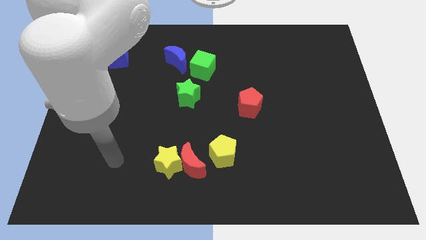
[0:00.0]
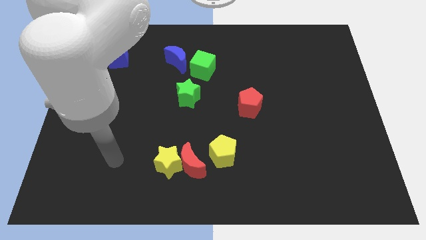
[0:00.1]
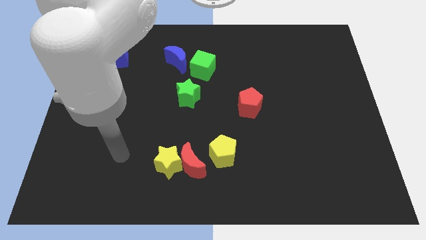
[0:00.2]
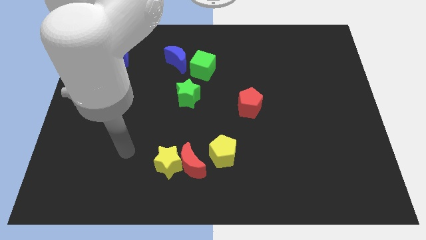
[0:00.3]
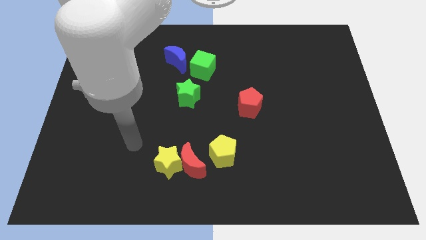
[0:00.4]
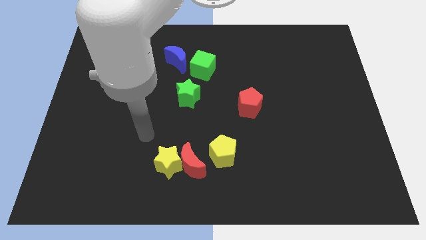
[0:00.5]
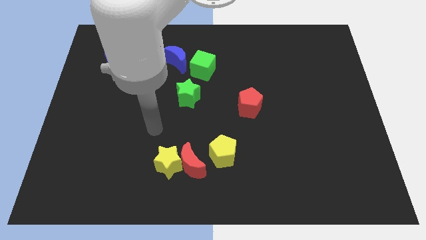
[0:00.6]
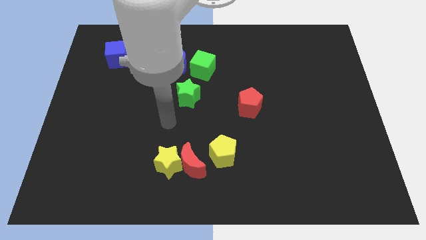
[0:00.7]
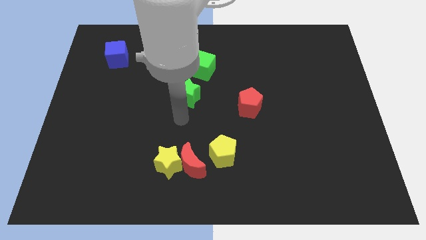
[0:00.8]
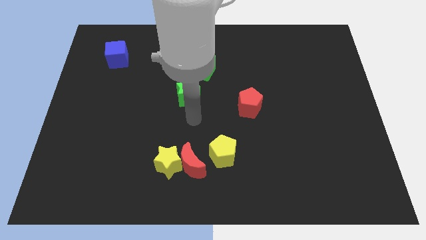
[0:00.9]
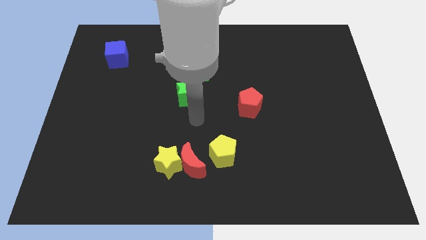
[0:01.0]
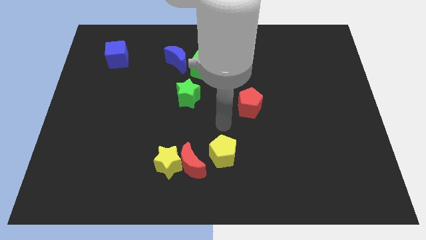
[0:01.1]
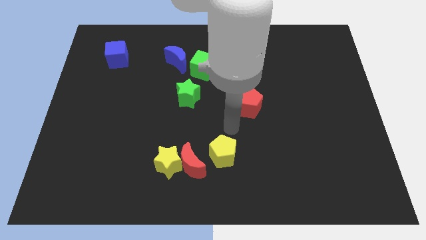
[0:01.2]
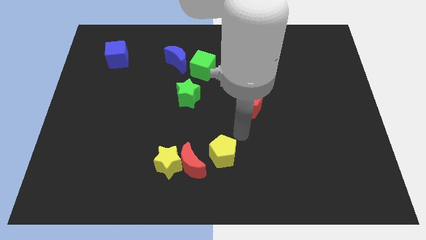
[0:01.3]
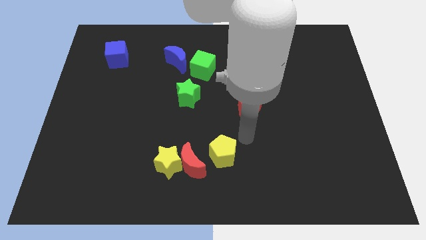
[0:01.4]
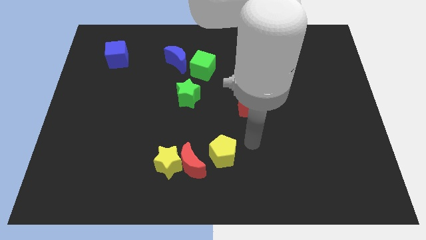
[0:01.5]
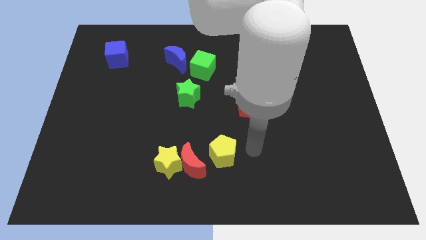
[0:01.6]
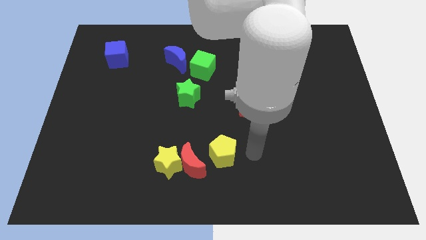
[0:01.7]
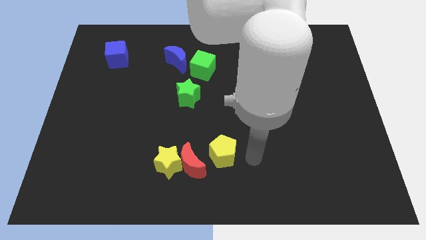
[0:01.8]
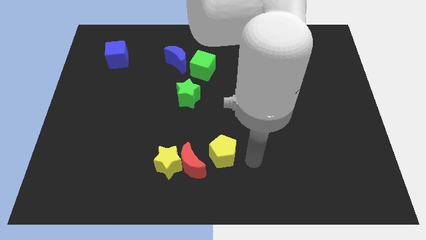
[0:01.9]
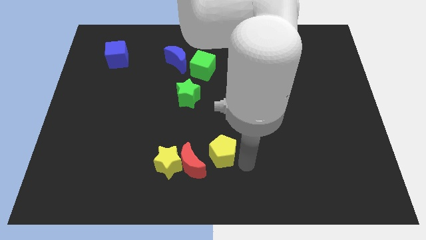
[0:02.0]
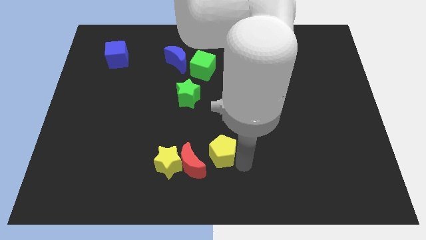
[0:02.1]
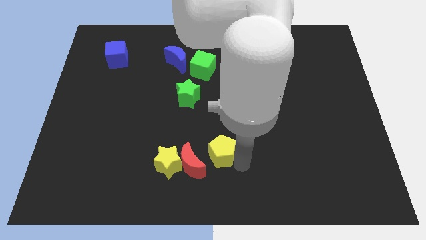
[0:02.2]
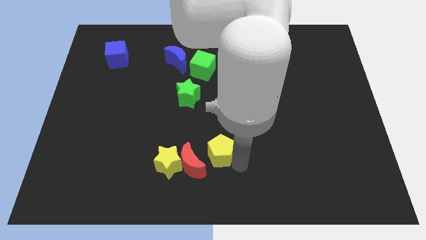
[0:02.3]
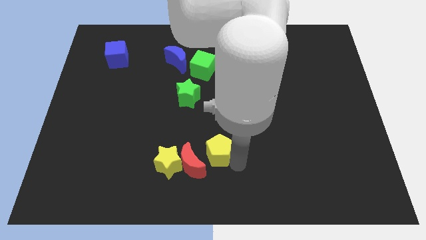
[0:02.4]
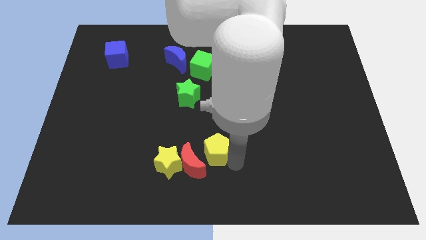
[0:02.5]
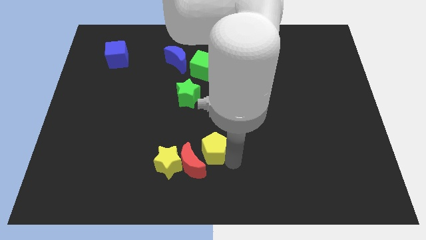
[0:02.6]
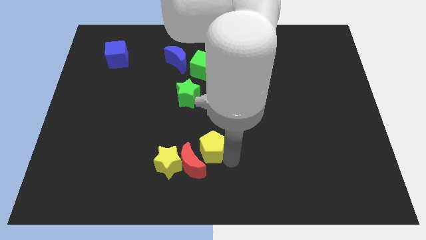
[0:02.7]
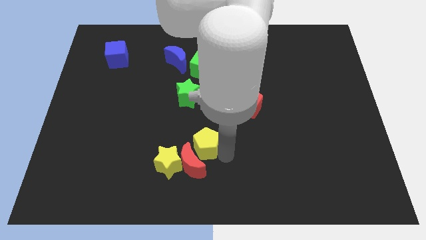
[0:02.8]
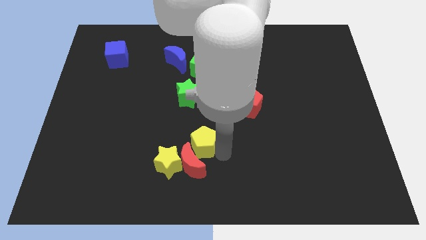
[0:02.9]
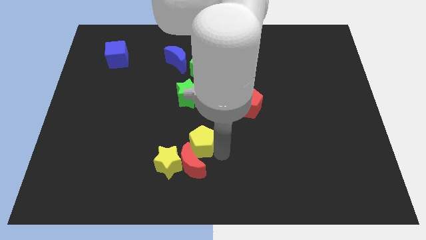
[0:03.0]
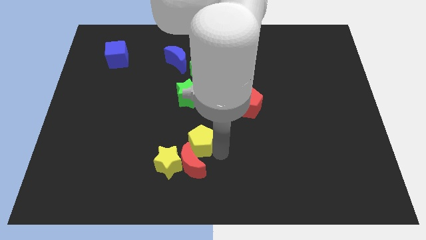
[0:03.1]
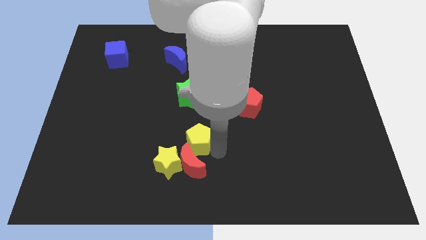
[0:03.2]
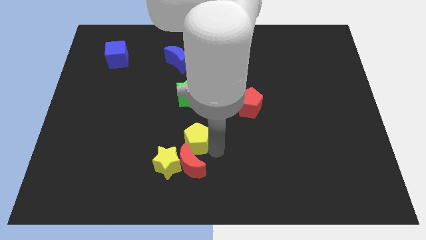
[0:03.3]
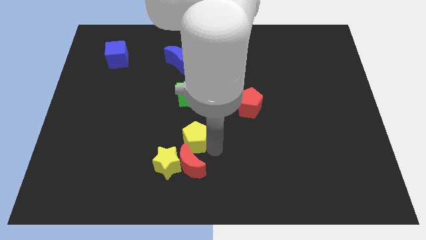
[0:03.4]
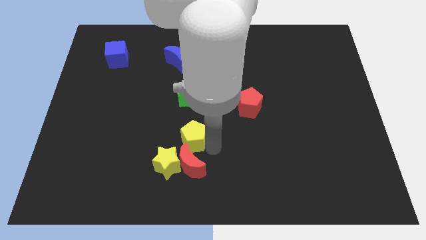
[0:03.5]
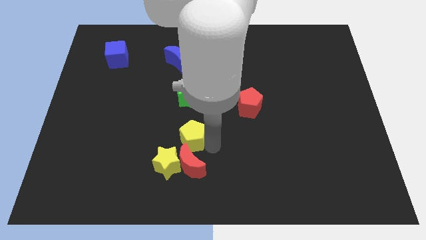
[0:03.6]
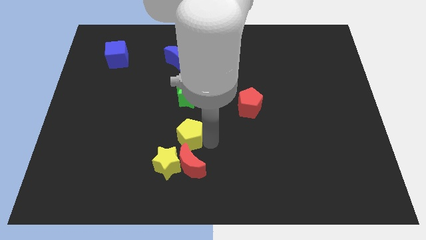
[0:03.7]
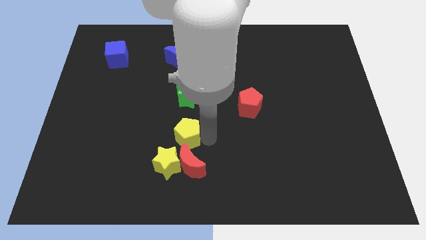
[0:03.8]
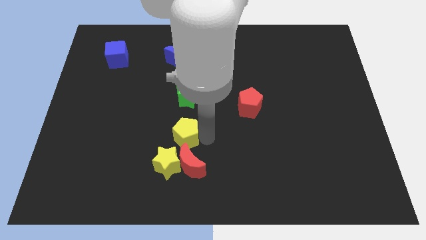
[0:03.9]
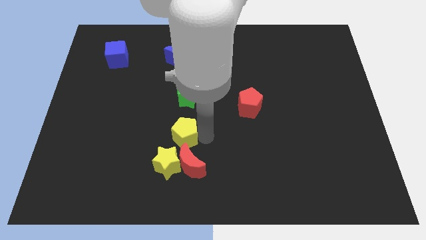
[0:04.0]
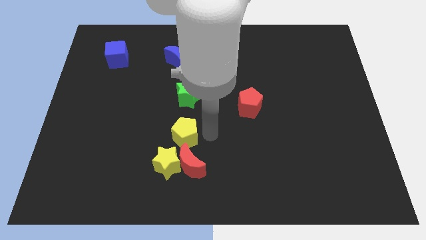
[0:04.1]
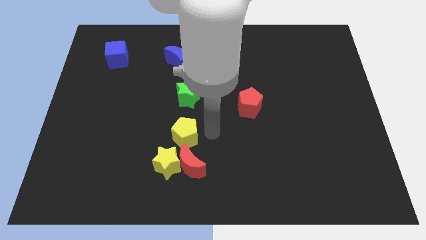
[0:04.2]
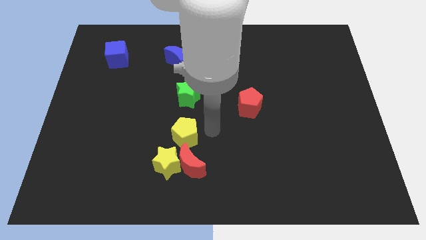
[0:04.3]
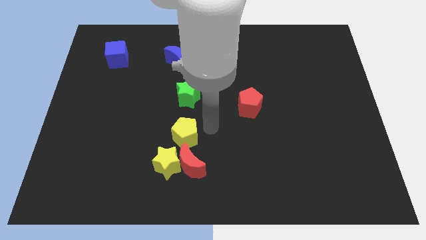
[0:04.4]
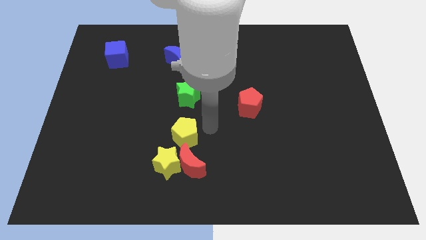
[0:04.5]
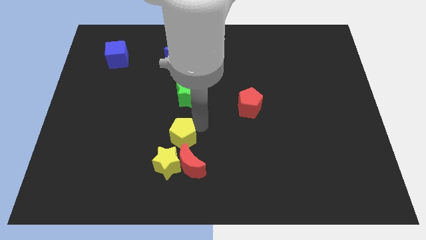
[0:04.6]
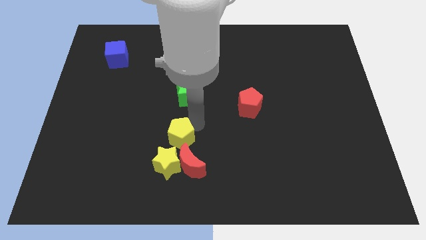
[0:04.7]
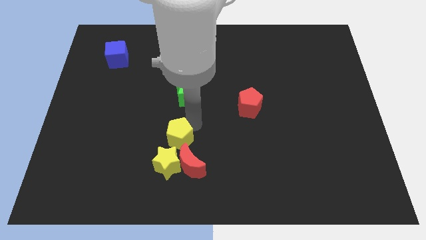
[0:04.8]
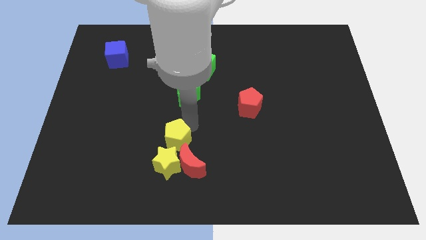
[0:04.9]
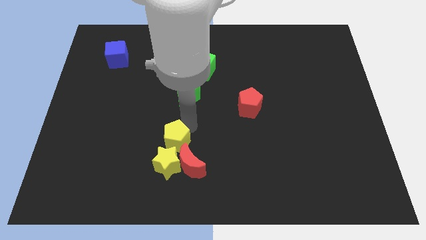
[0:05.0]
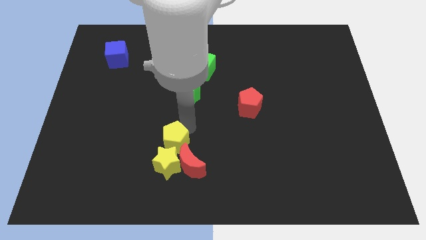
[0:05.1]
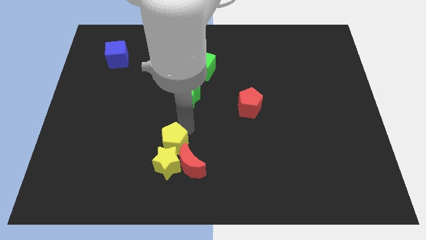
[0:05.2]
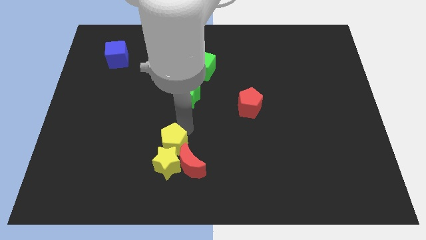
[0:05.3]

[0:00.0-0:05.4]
slide the yellow pentagon to the yellow star

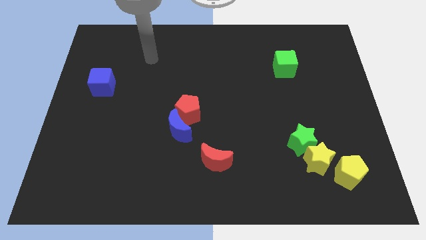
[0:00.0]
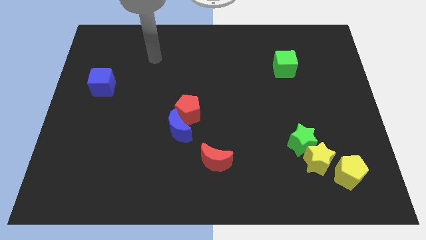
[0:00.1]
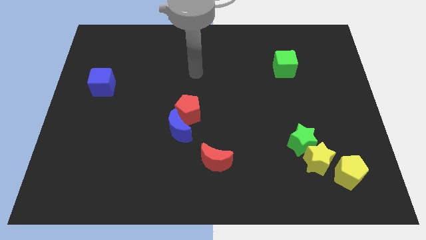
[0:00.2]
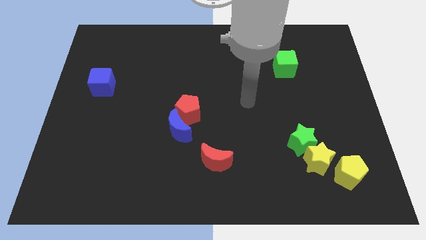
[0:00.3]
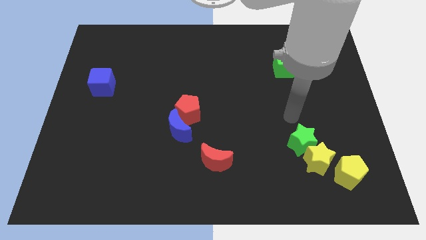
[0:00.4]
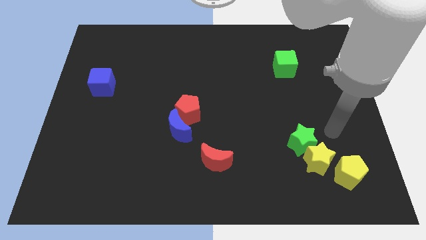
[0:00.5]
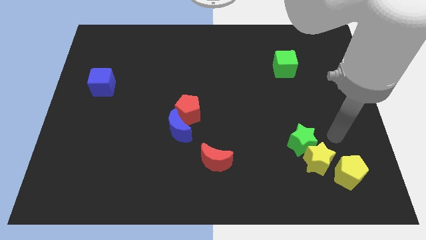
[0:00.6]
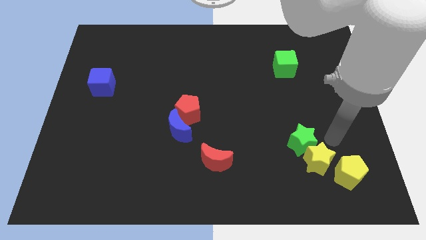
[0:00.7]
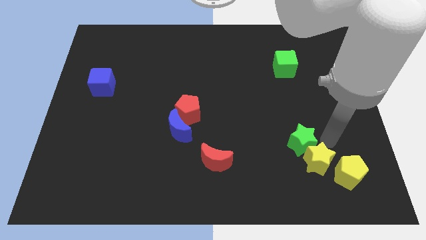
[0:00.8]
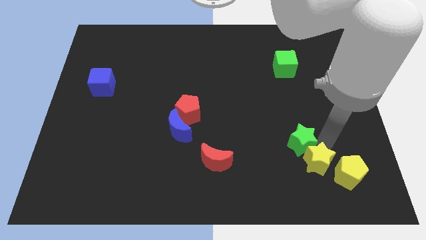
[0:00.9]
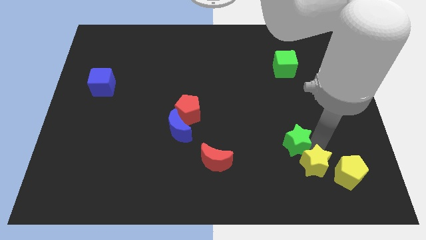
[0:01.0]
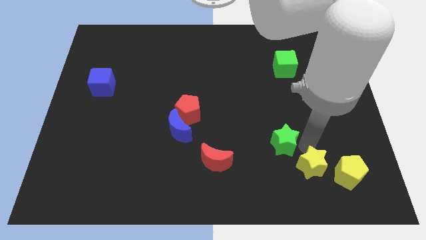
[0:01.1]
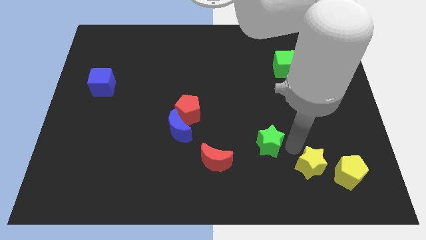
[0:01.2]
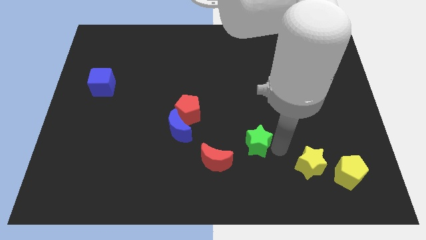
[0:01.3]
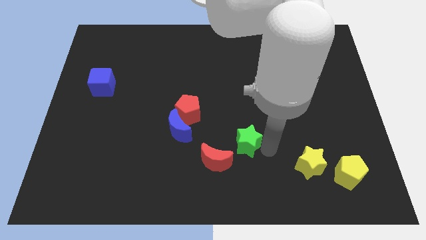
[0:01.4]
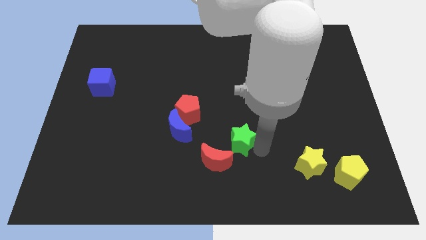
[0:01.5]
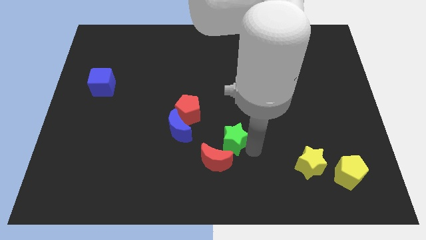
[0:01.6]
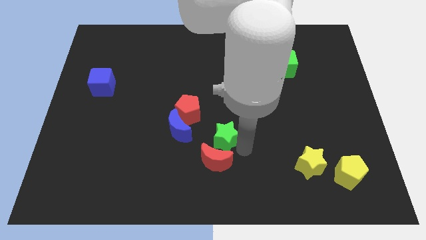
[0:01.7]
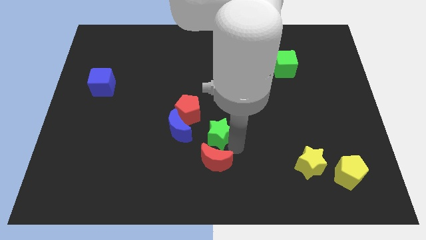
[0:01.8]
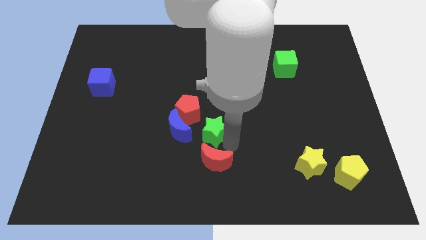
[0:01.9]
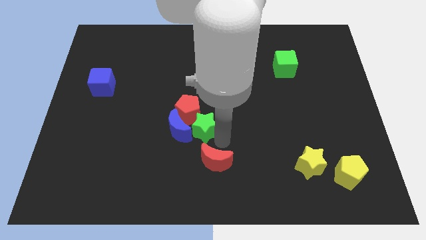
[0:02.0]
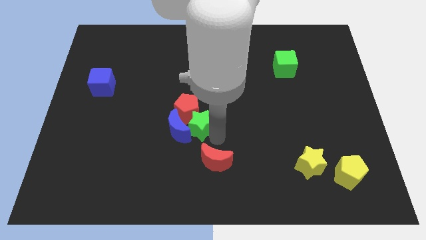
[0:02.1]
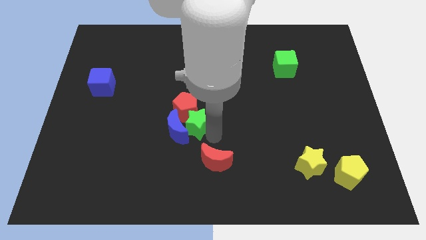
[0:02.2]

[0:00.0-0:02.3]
put the green star close to the blue moon

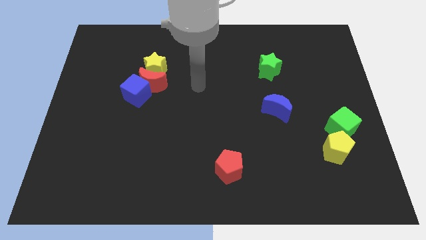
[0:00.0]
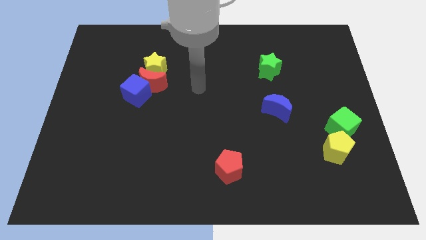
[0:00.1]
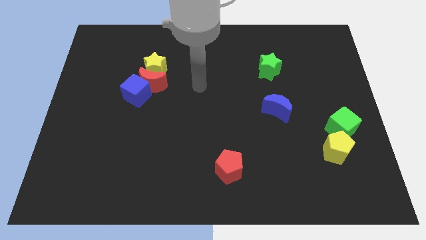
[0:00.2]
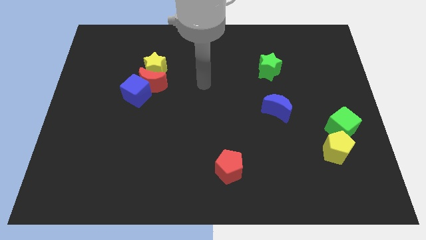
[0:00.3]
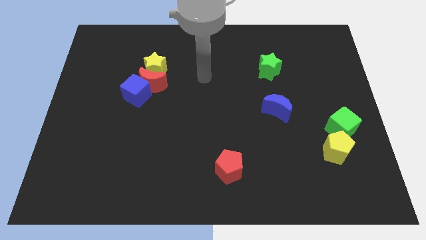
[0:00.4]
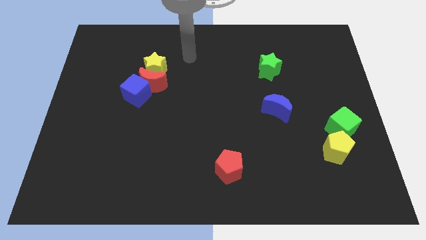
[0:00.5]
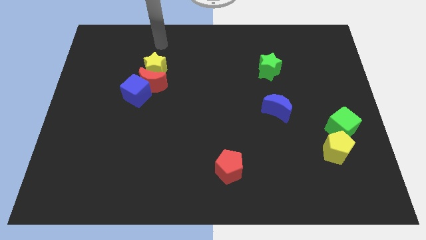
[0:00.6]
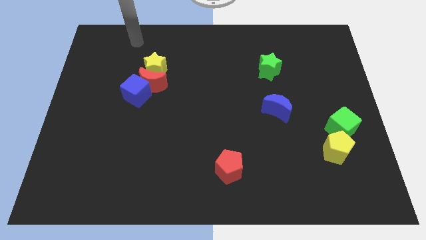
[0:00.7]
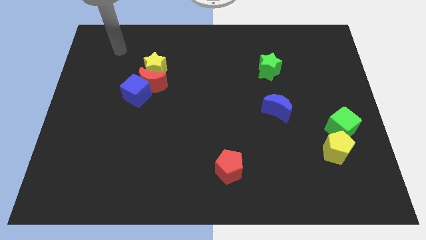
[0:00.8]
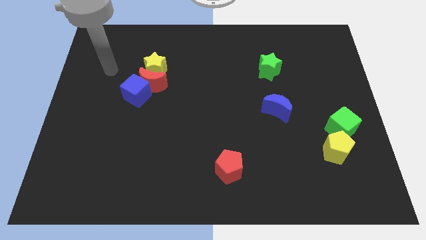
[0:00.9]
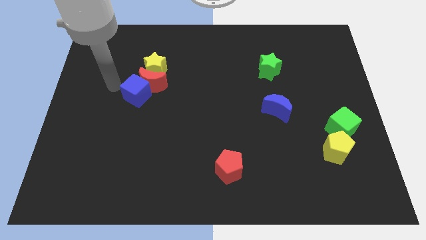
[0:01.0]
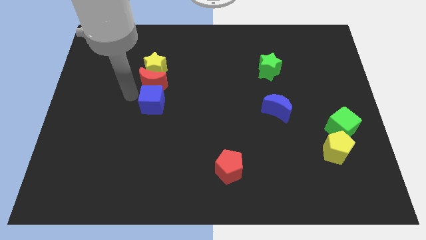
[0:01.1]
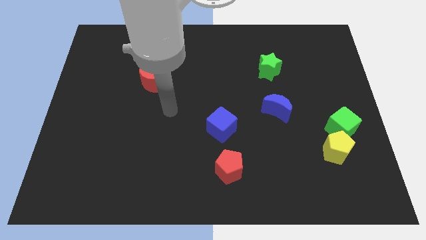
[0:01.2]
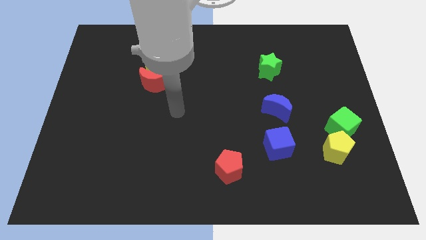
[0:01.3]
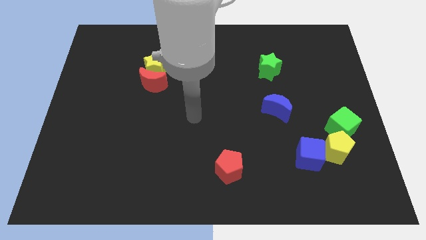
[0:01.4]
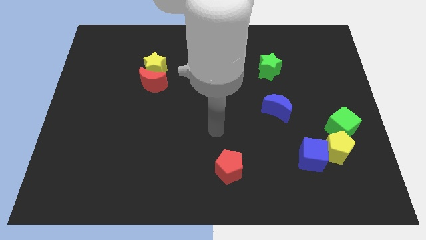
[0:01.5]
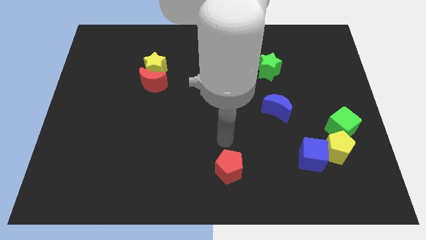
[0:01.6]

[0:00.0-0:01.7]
put the blue cube close to the yellow pentagon
